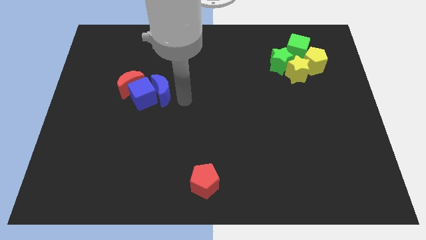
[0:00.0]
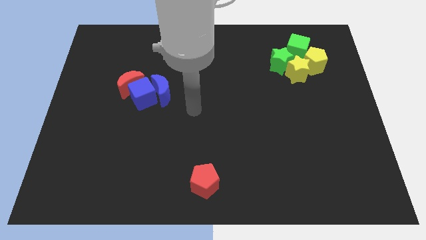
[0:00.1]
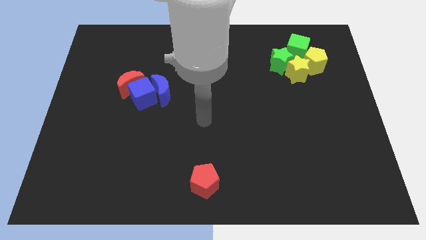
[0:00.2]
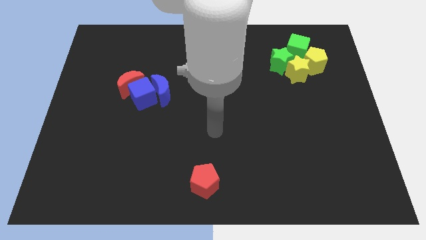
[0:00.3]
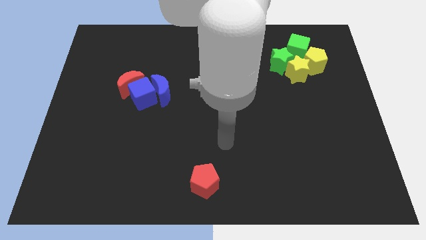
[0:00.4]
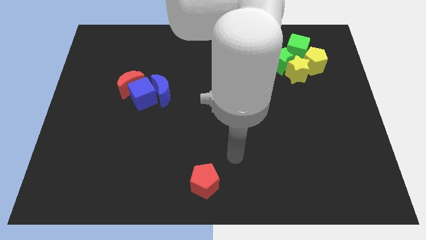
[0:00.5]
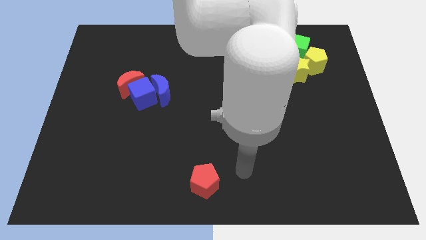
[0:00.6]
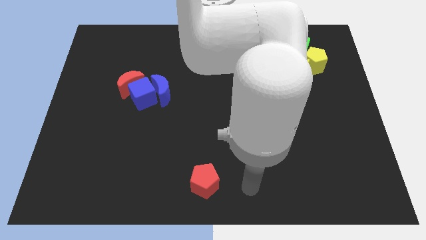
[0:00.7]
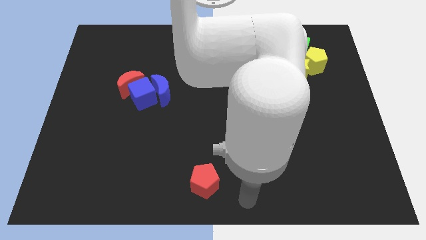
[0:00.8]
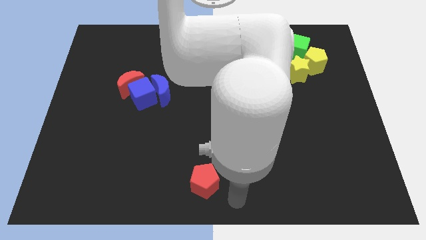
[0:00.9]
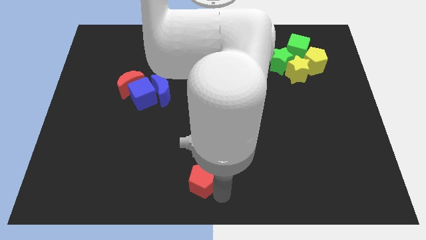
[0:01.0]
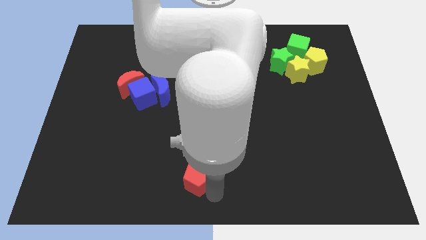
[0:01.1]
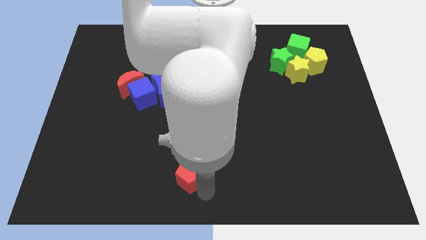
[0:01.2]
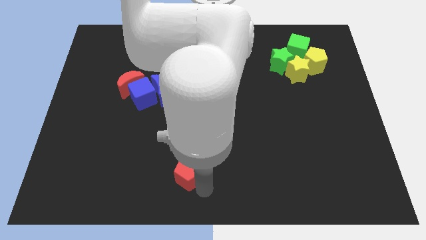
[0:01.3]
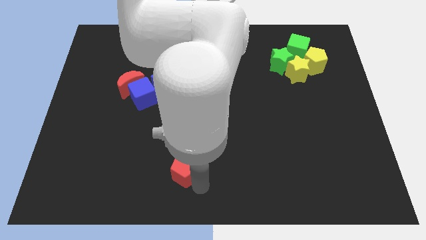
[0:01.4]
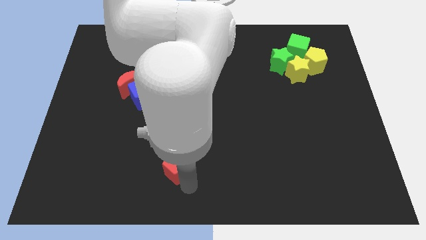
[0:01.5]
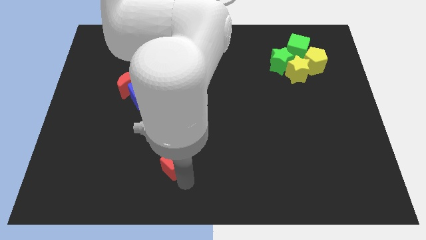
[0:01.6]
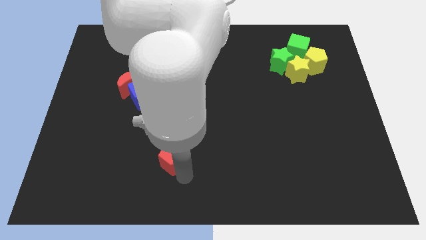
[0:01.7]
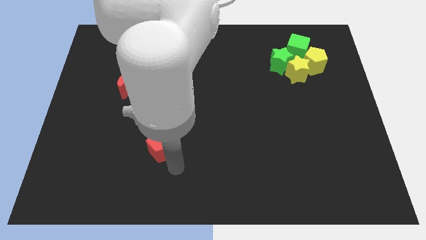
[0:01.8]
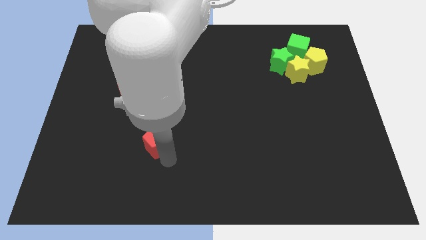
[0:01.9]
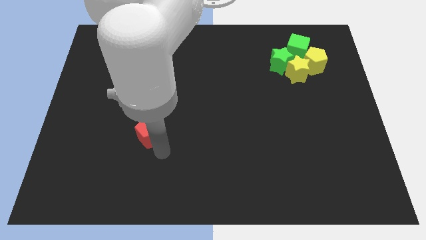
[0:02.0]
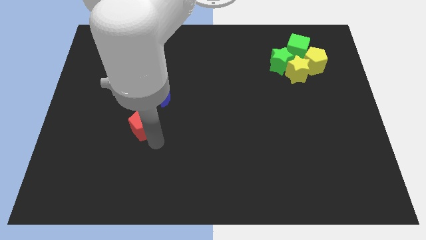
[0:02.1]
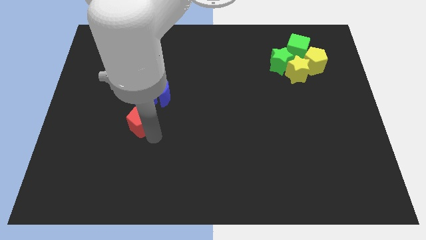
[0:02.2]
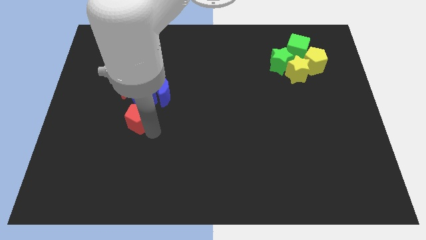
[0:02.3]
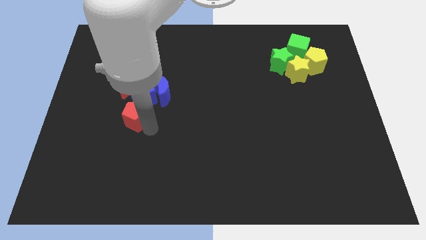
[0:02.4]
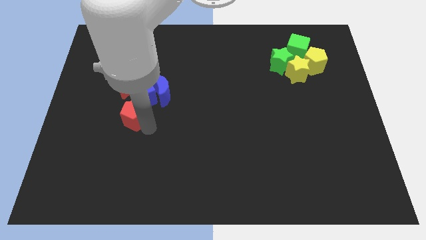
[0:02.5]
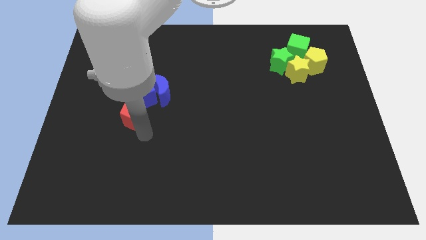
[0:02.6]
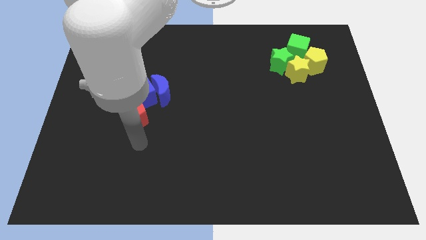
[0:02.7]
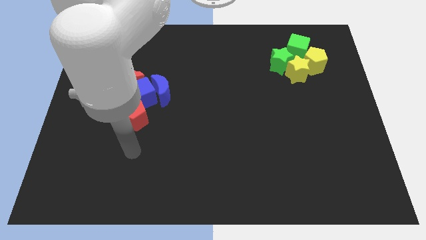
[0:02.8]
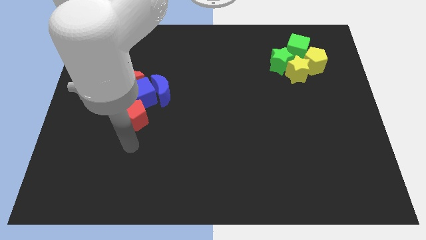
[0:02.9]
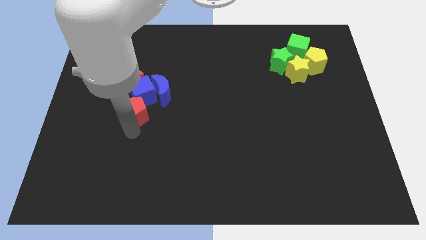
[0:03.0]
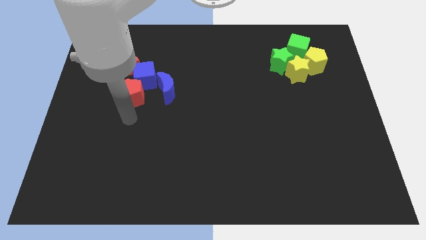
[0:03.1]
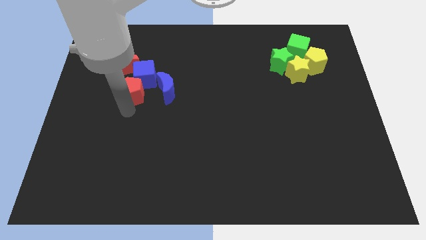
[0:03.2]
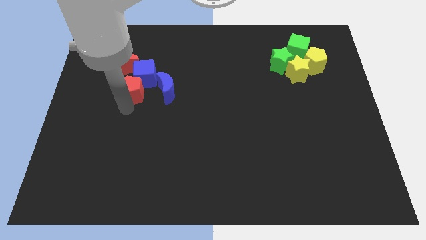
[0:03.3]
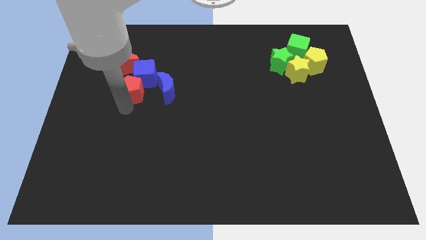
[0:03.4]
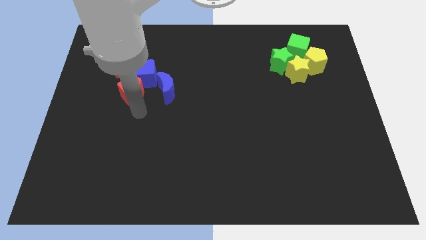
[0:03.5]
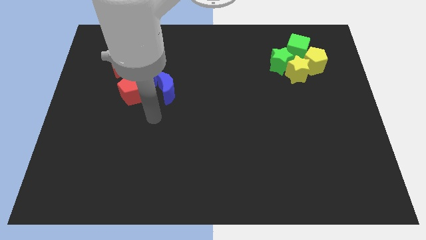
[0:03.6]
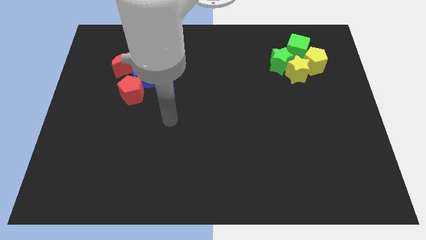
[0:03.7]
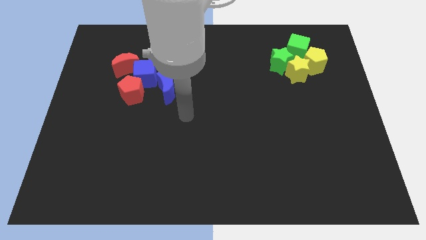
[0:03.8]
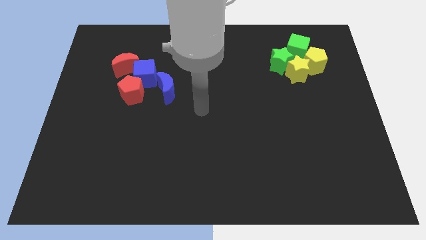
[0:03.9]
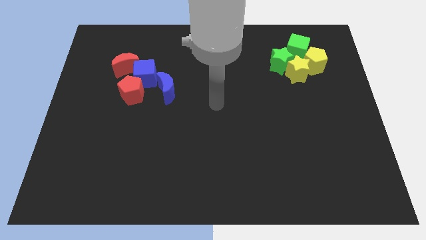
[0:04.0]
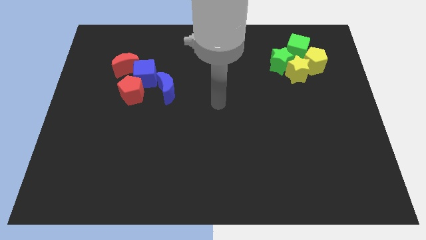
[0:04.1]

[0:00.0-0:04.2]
place the red pentagon below the blue cube

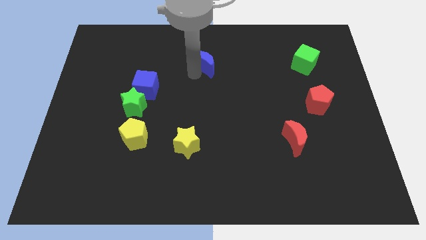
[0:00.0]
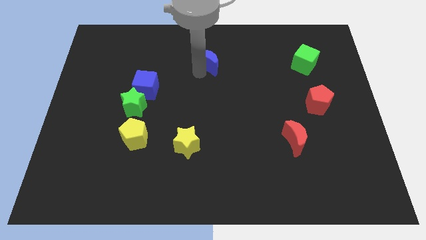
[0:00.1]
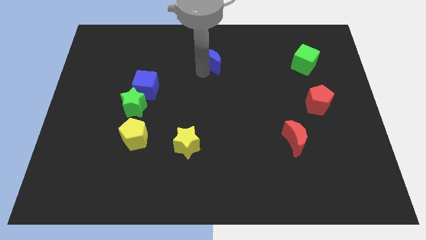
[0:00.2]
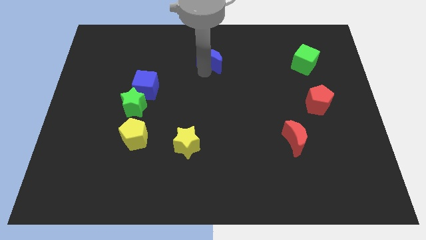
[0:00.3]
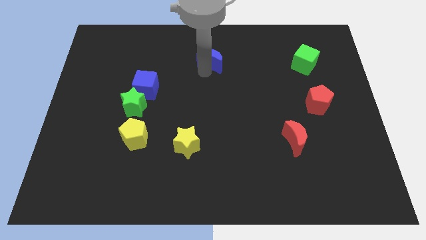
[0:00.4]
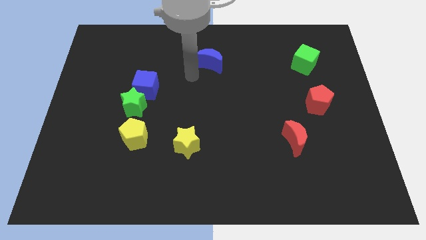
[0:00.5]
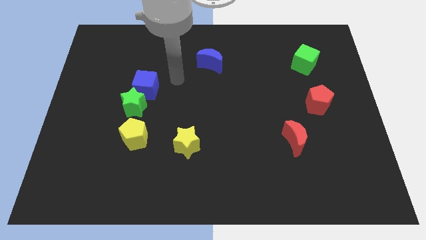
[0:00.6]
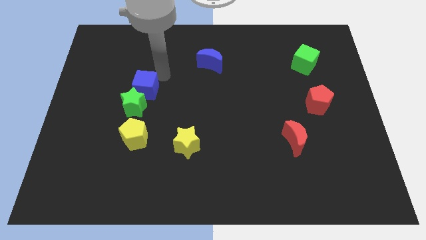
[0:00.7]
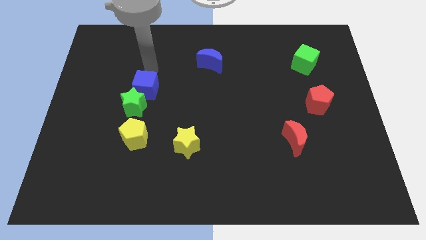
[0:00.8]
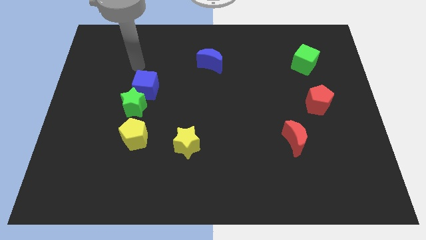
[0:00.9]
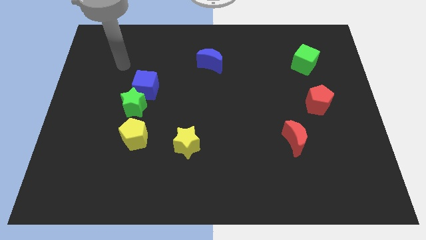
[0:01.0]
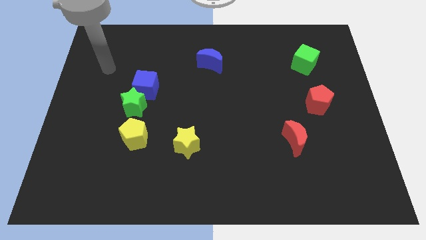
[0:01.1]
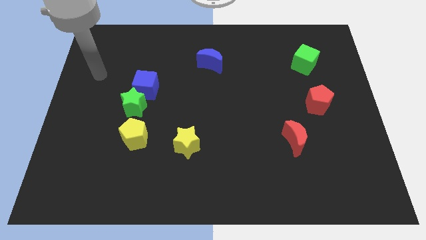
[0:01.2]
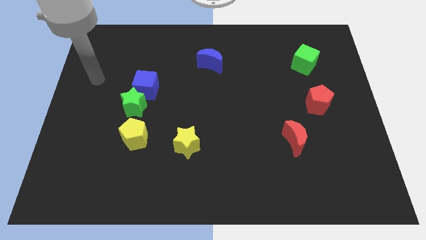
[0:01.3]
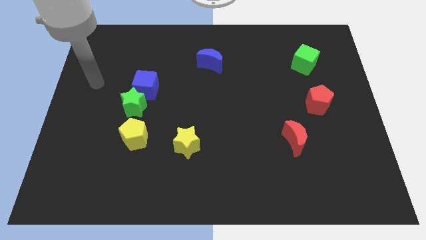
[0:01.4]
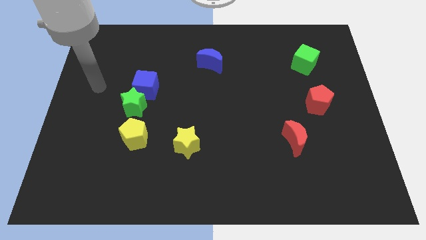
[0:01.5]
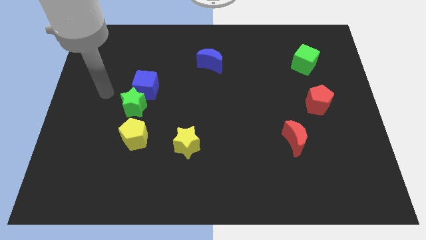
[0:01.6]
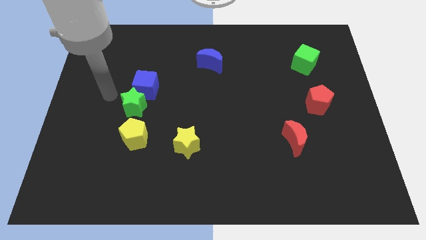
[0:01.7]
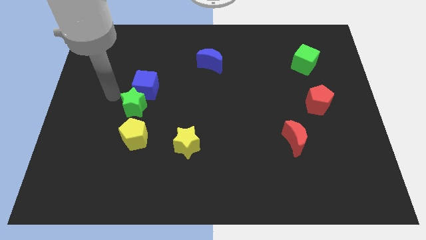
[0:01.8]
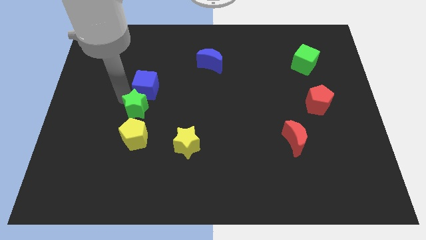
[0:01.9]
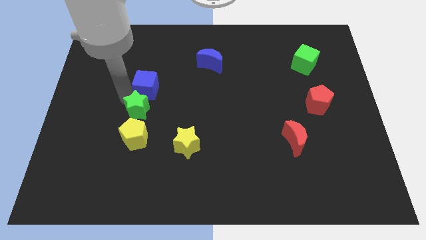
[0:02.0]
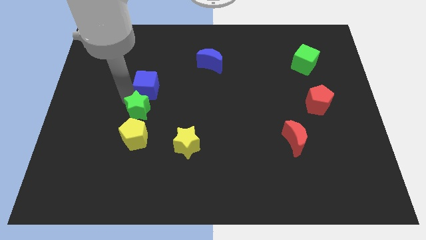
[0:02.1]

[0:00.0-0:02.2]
point your arm close to green star

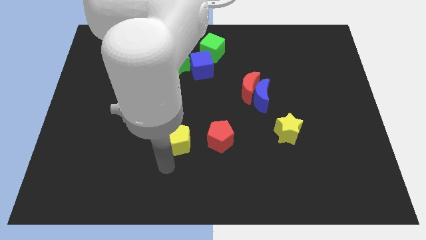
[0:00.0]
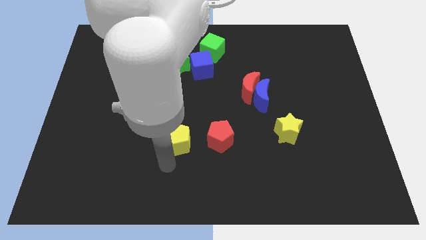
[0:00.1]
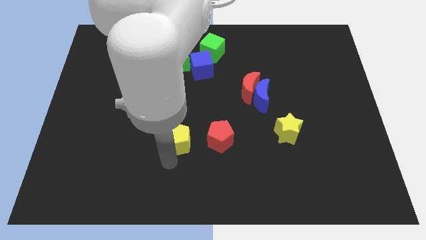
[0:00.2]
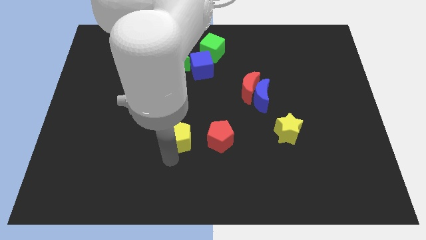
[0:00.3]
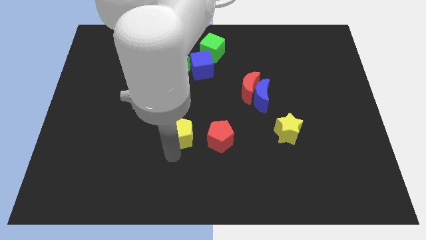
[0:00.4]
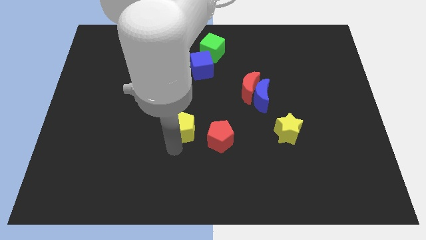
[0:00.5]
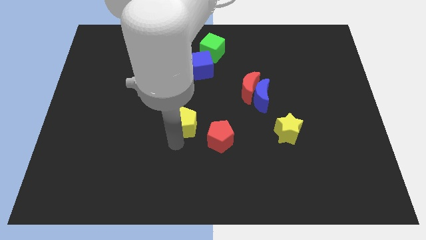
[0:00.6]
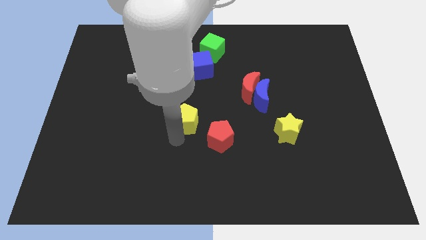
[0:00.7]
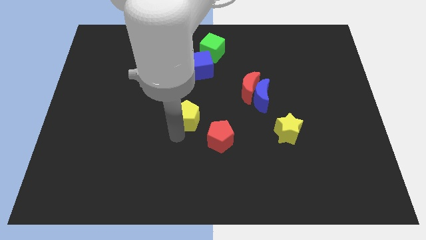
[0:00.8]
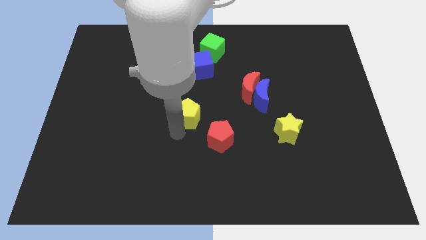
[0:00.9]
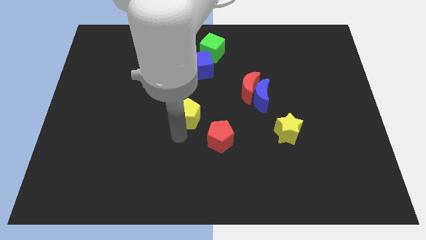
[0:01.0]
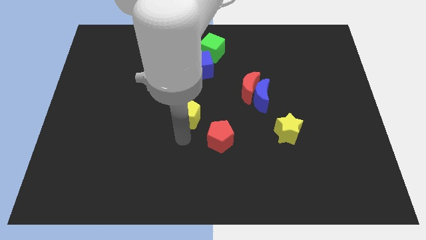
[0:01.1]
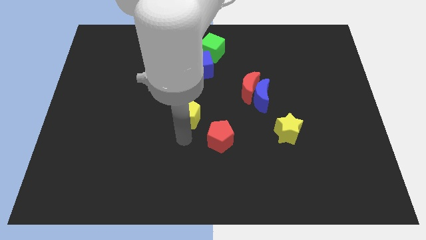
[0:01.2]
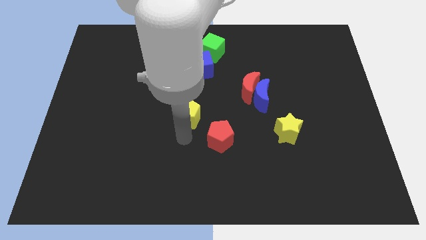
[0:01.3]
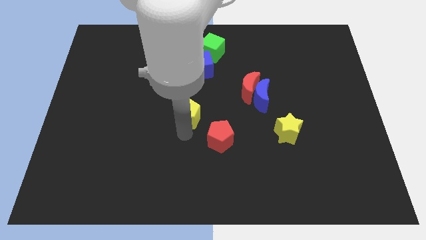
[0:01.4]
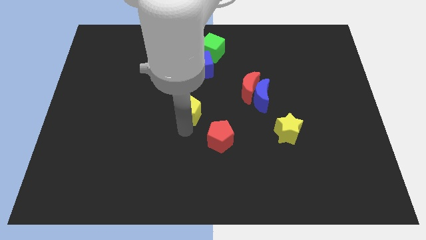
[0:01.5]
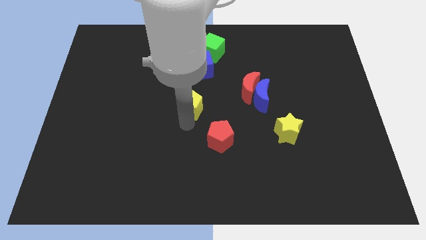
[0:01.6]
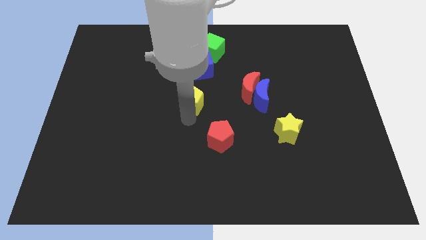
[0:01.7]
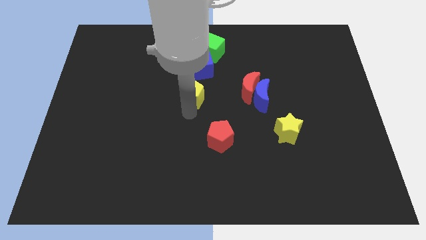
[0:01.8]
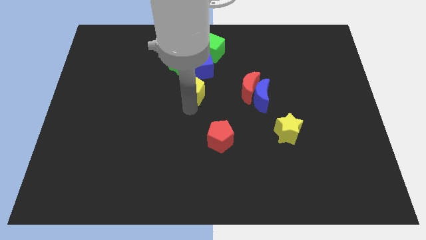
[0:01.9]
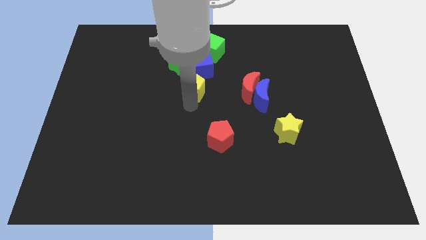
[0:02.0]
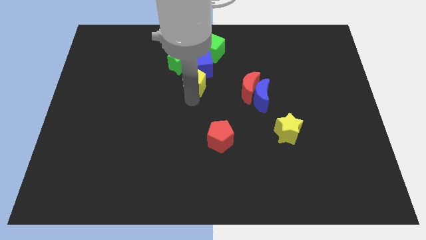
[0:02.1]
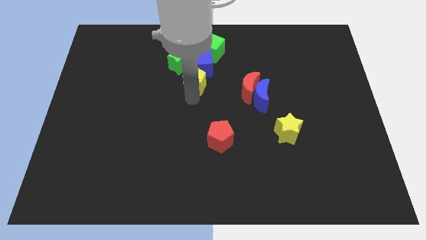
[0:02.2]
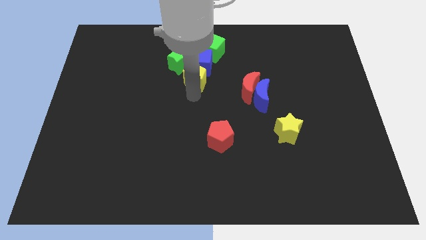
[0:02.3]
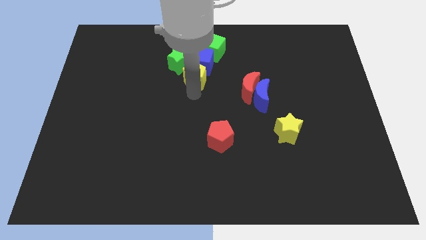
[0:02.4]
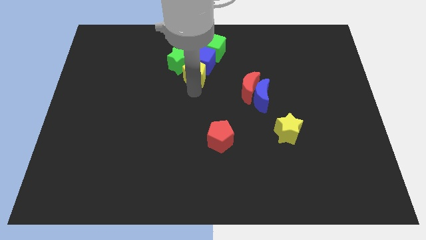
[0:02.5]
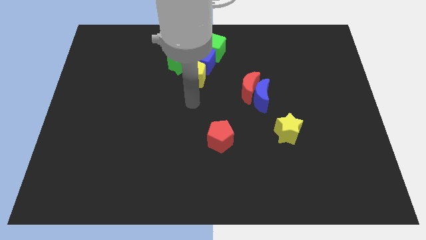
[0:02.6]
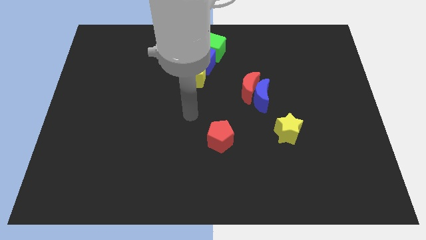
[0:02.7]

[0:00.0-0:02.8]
push the yellow pentagon into the blue cube

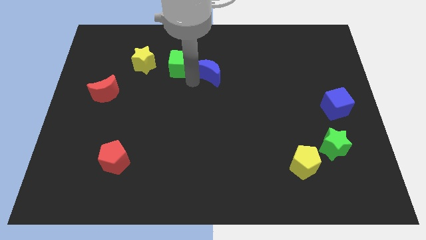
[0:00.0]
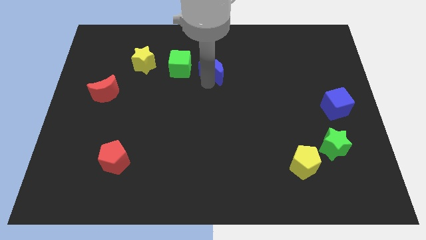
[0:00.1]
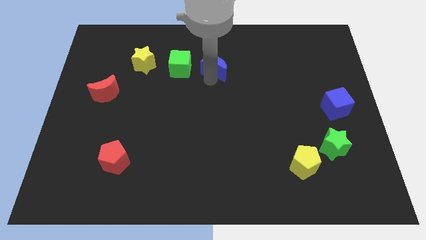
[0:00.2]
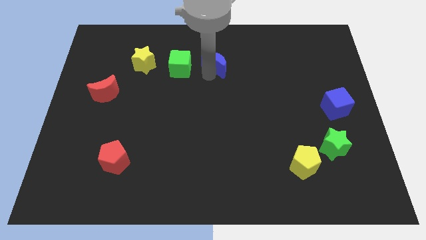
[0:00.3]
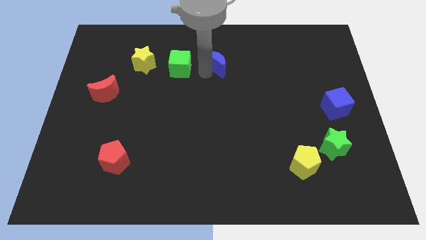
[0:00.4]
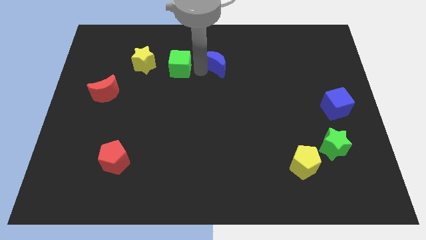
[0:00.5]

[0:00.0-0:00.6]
push the blue moon upwards slightly
